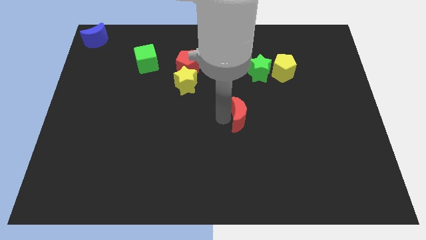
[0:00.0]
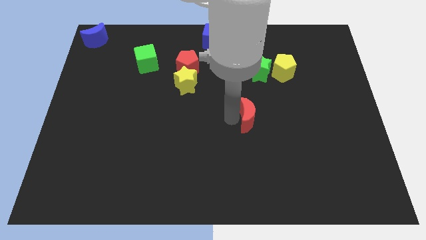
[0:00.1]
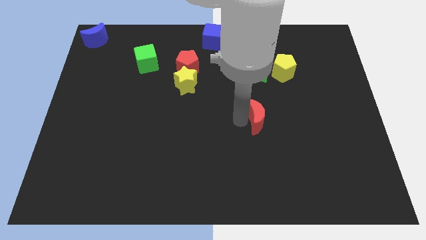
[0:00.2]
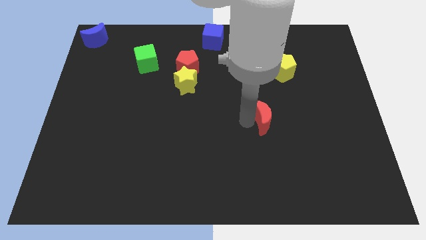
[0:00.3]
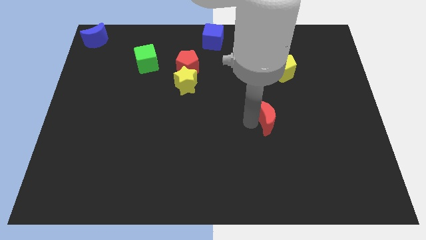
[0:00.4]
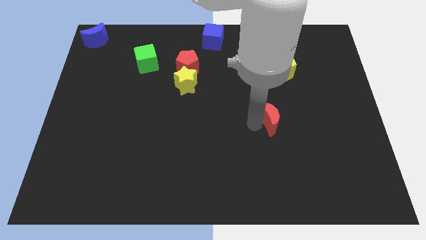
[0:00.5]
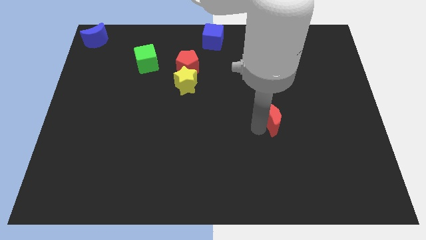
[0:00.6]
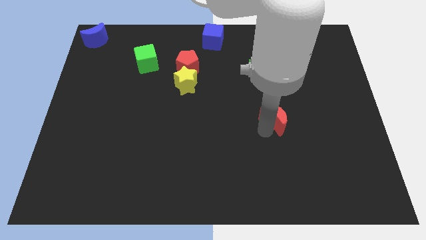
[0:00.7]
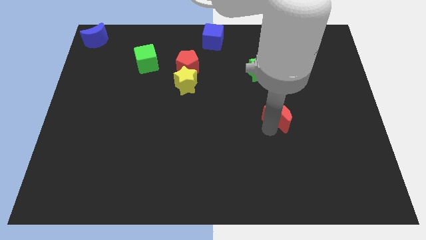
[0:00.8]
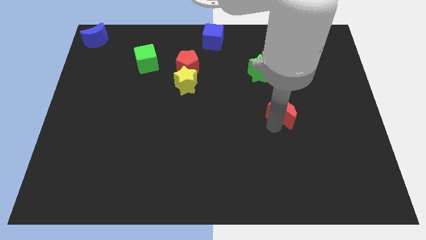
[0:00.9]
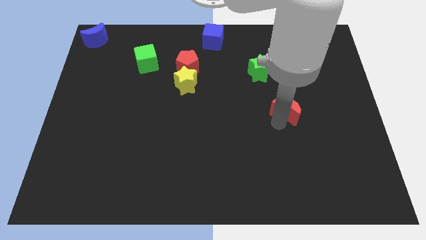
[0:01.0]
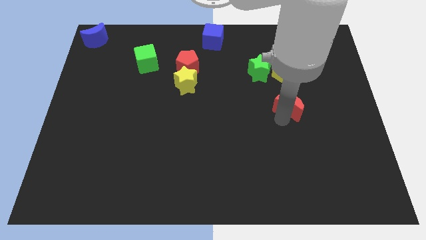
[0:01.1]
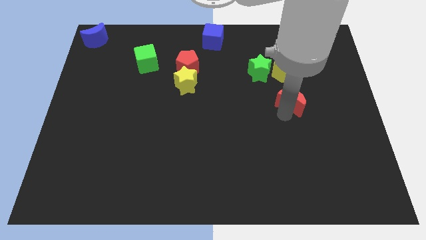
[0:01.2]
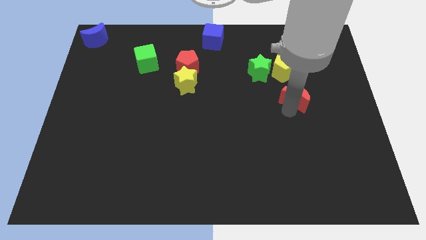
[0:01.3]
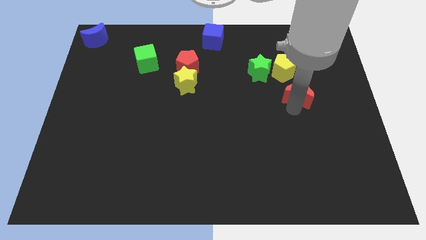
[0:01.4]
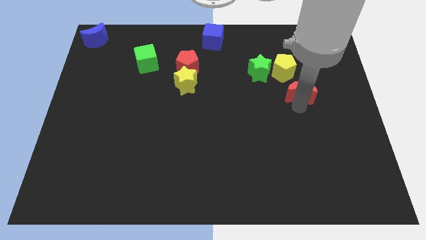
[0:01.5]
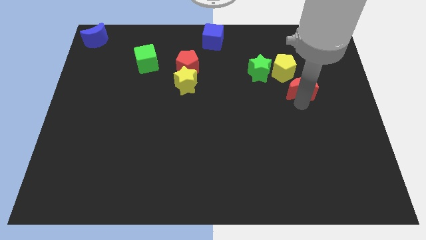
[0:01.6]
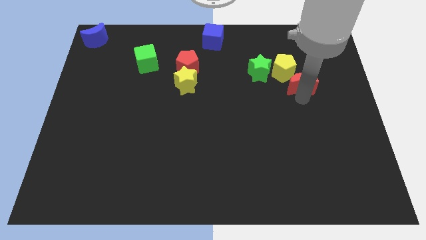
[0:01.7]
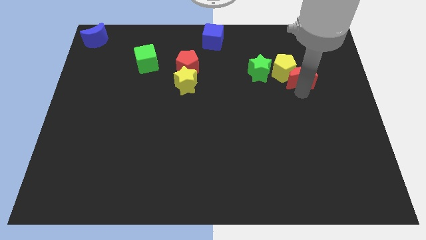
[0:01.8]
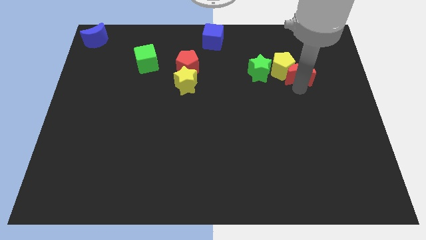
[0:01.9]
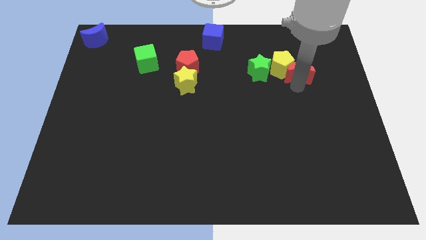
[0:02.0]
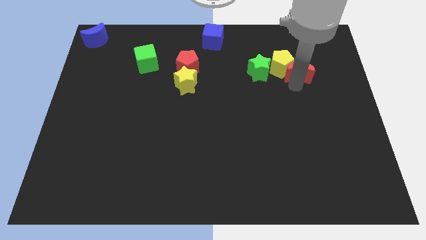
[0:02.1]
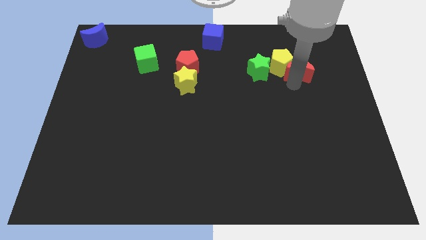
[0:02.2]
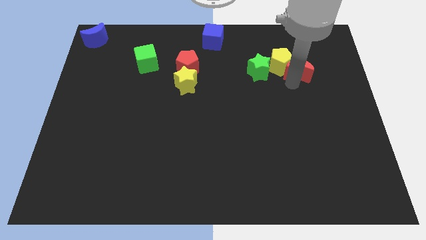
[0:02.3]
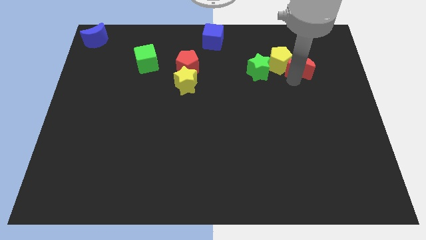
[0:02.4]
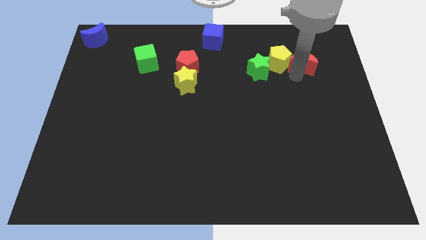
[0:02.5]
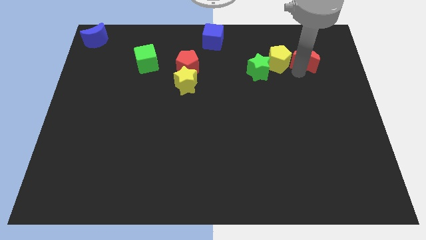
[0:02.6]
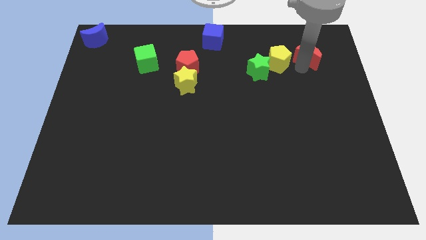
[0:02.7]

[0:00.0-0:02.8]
take the red moon to the right side of the yellow pentagon

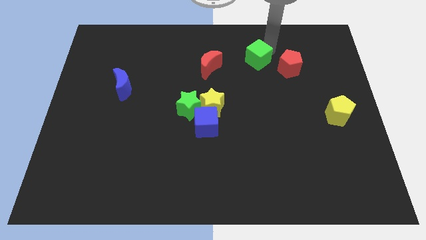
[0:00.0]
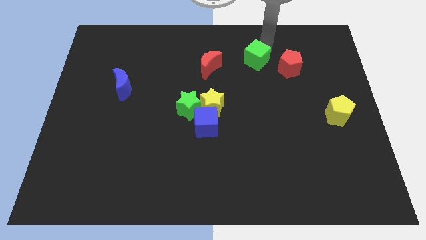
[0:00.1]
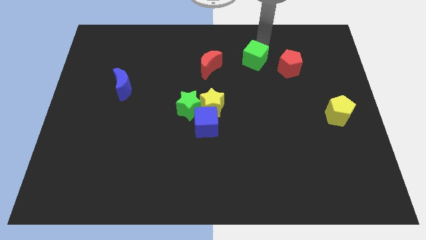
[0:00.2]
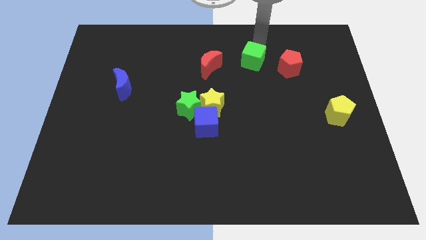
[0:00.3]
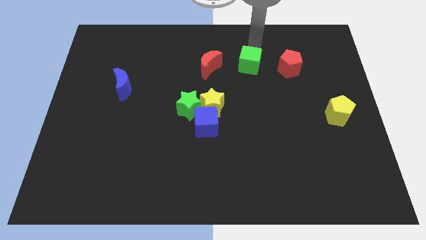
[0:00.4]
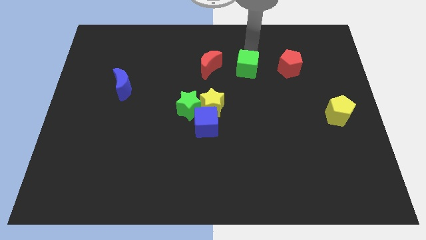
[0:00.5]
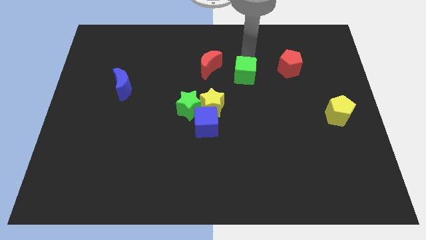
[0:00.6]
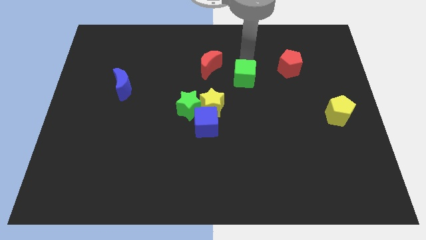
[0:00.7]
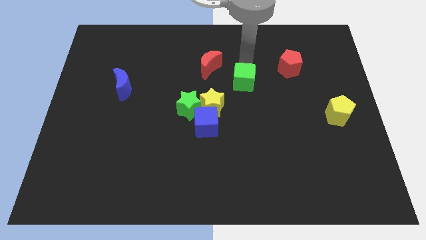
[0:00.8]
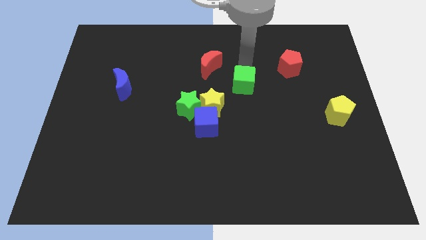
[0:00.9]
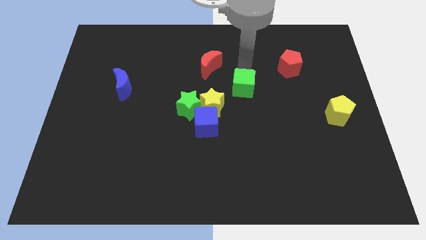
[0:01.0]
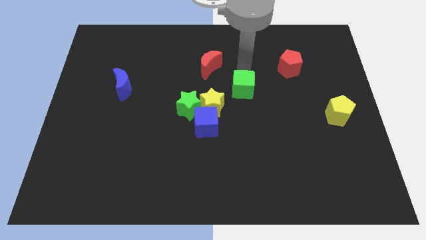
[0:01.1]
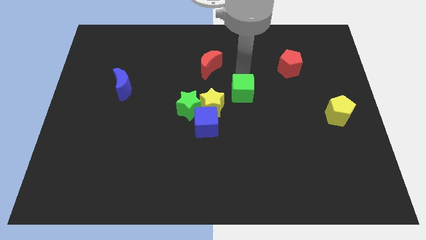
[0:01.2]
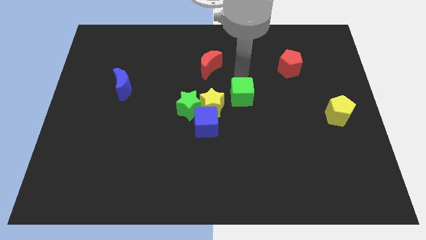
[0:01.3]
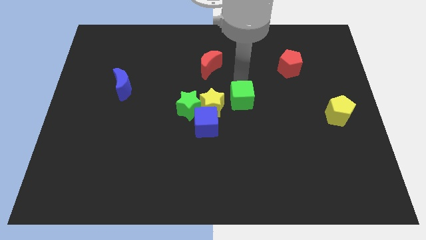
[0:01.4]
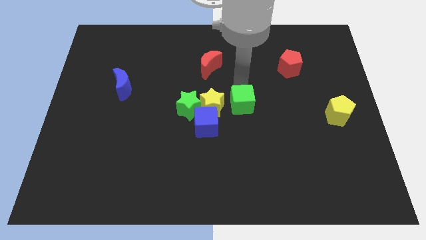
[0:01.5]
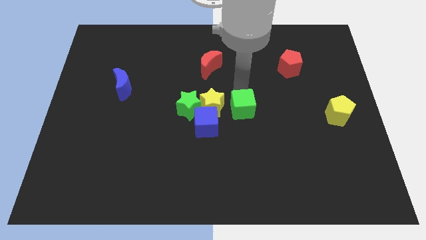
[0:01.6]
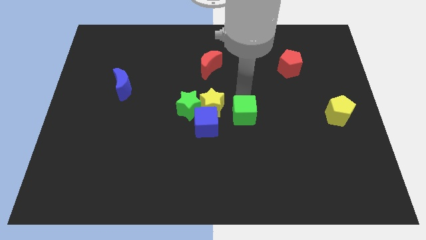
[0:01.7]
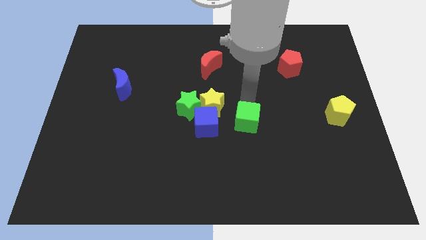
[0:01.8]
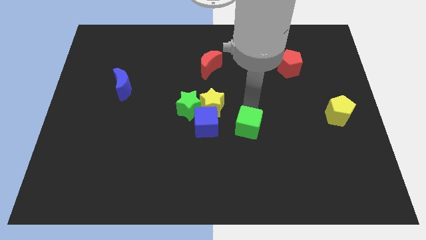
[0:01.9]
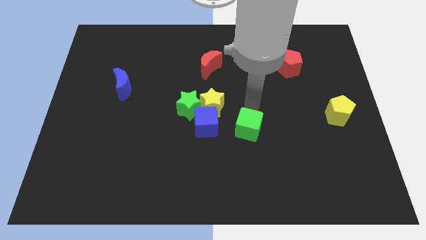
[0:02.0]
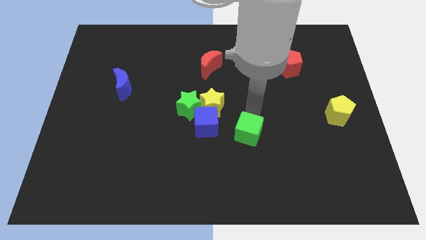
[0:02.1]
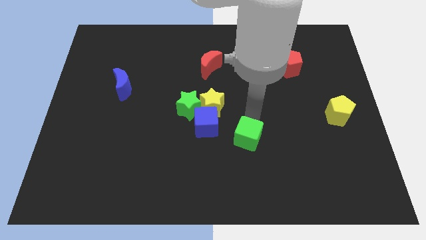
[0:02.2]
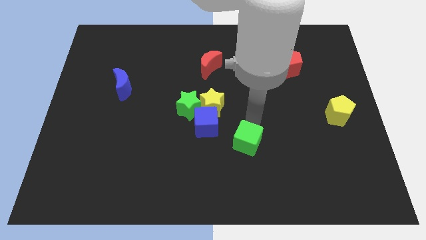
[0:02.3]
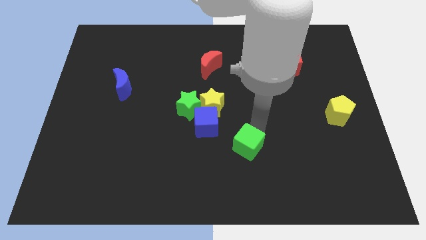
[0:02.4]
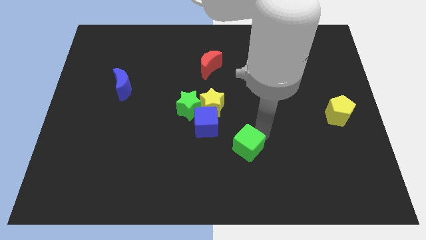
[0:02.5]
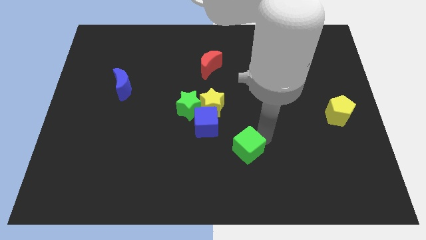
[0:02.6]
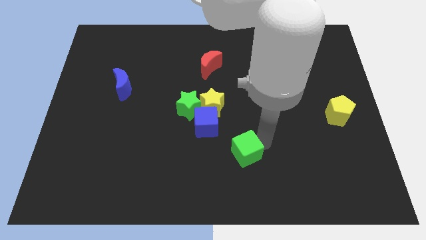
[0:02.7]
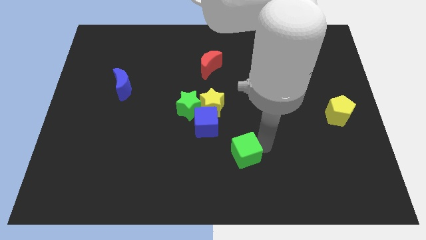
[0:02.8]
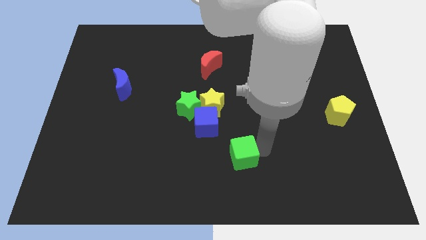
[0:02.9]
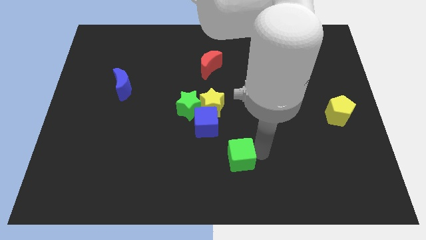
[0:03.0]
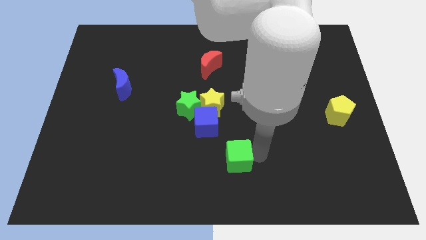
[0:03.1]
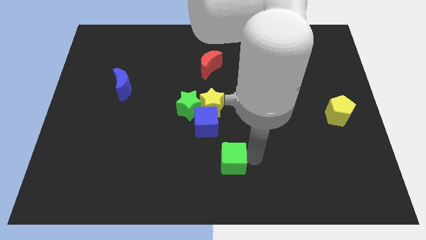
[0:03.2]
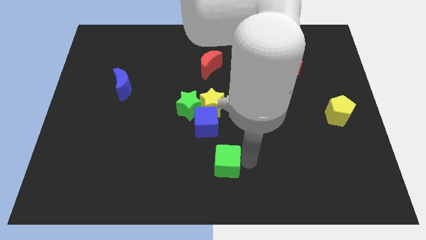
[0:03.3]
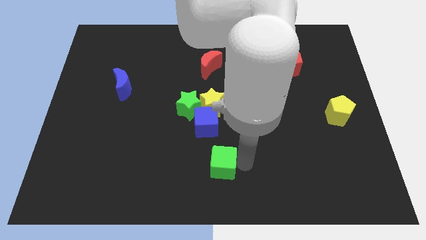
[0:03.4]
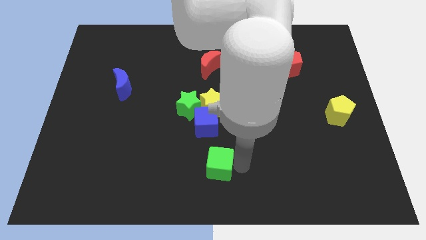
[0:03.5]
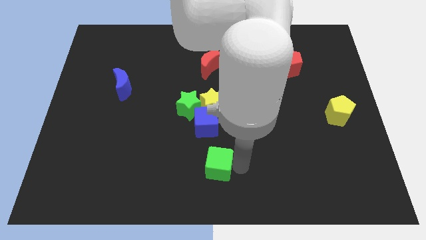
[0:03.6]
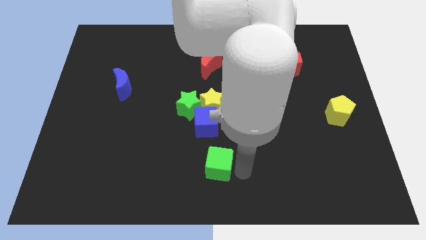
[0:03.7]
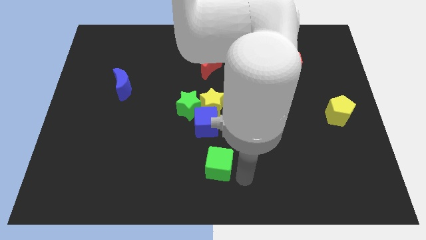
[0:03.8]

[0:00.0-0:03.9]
place the green cube near to the bottom center of the board

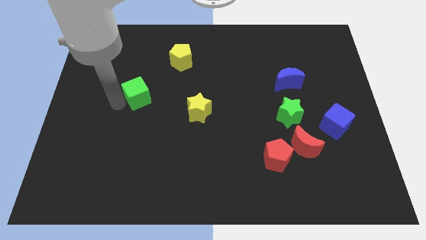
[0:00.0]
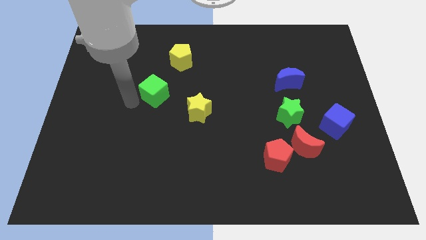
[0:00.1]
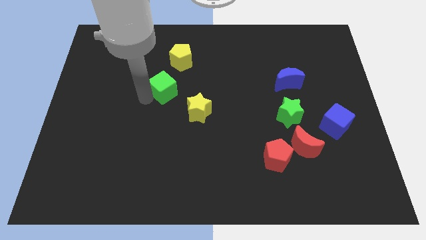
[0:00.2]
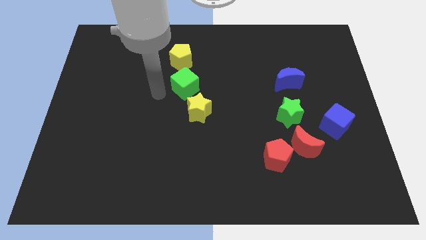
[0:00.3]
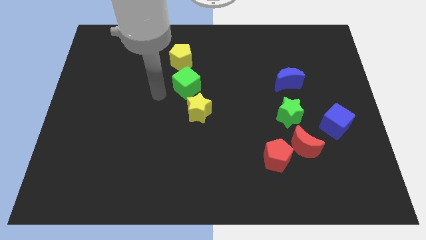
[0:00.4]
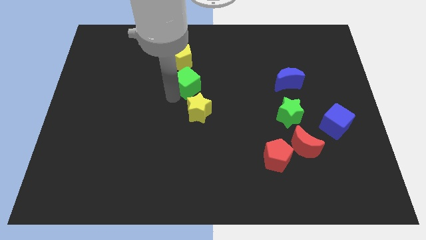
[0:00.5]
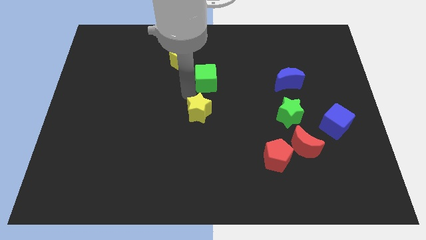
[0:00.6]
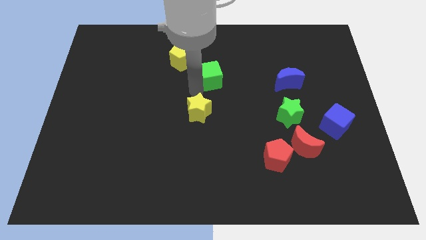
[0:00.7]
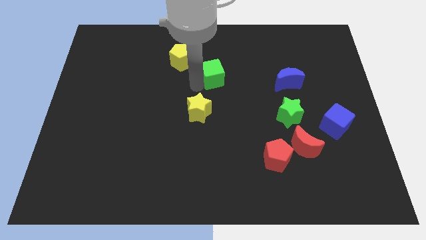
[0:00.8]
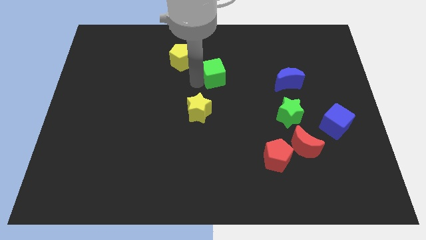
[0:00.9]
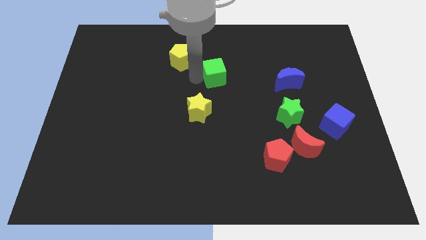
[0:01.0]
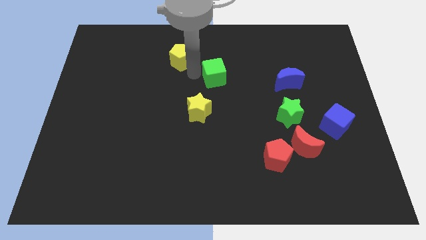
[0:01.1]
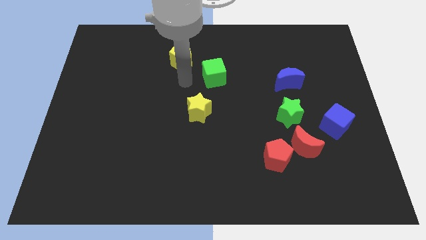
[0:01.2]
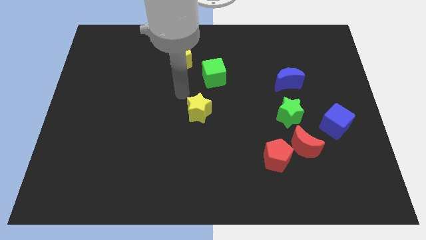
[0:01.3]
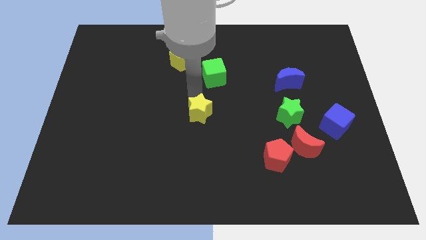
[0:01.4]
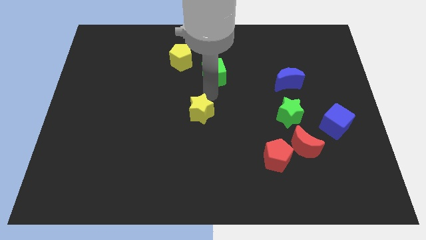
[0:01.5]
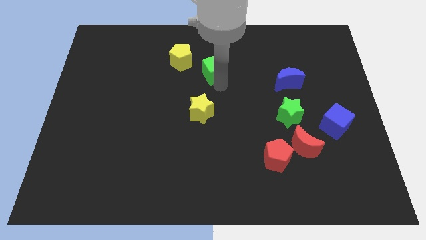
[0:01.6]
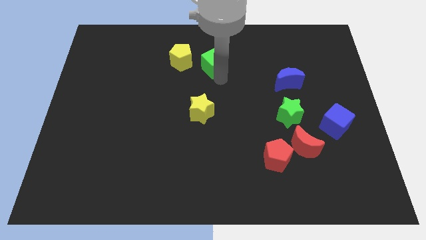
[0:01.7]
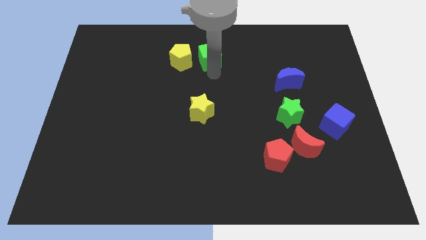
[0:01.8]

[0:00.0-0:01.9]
push the green cube towards the yellow pentagon

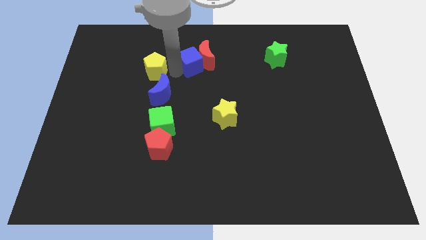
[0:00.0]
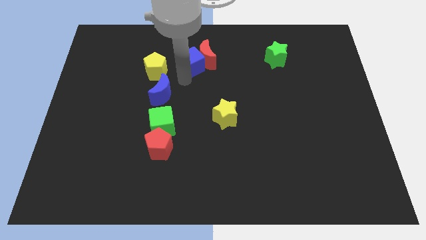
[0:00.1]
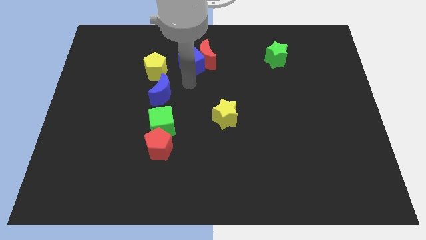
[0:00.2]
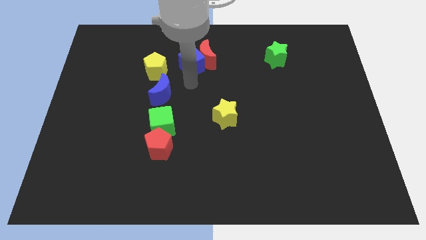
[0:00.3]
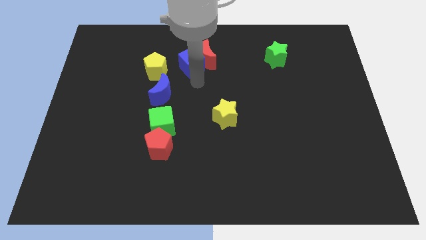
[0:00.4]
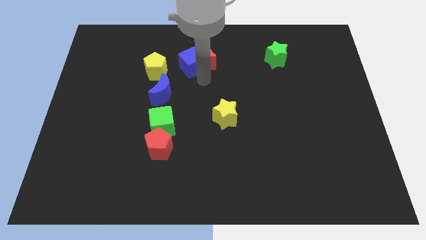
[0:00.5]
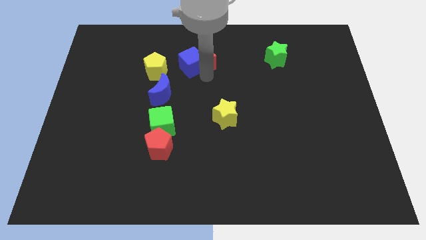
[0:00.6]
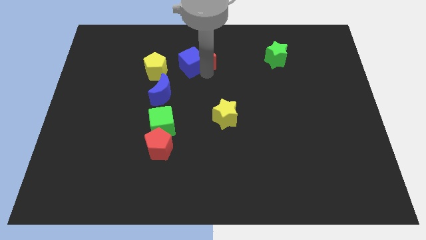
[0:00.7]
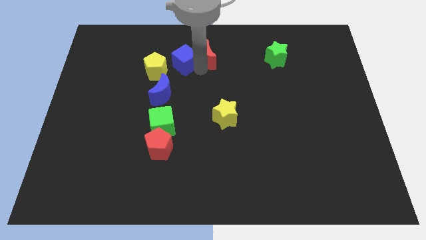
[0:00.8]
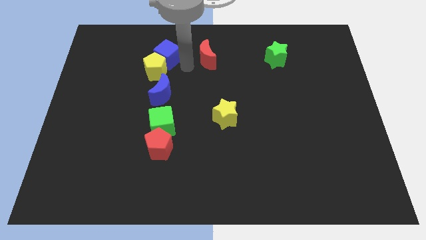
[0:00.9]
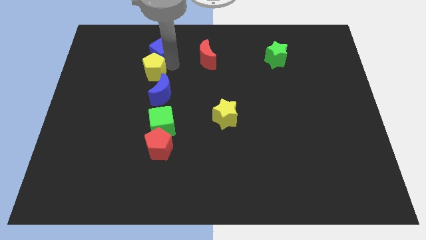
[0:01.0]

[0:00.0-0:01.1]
slide blue cube on top of yellow pentagon
